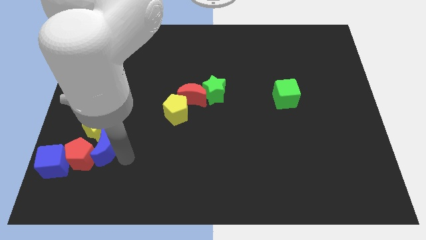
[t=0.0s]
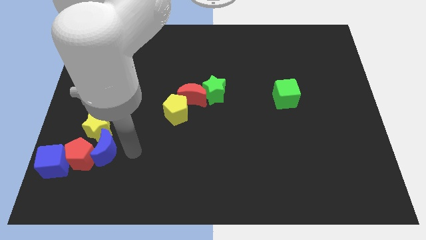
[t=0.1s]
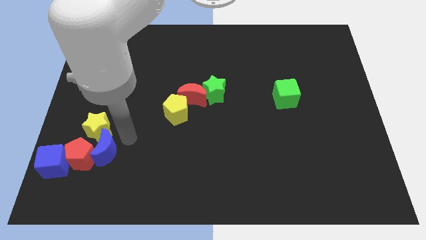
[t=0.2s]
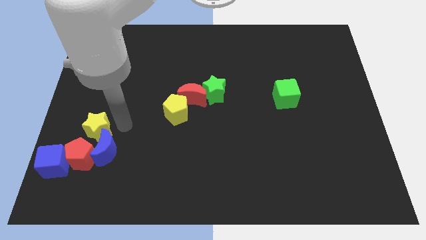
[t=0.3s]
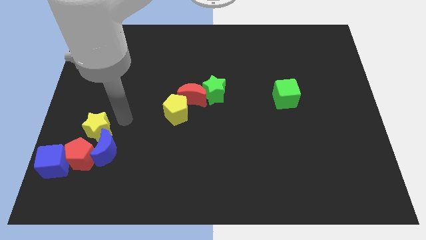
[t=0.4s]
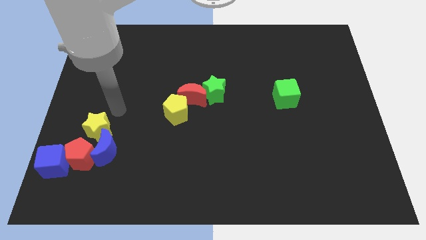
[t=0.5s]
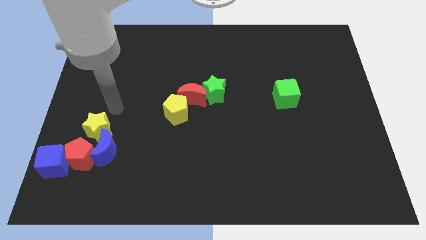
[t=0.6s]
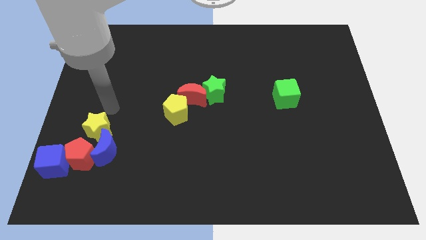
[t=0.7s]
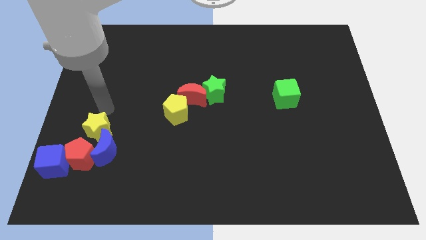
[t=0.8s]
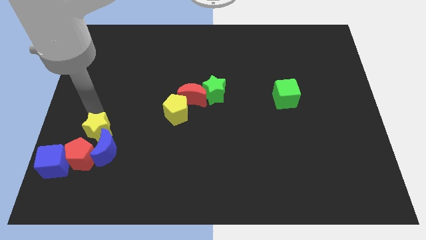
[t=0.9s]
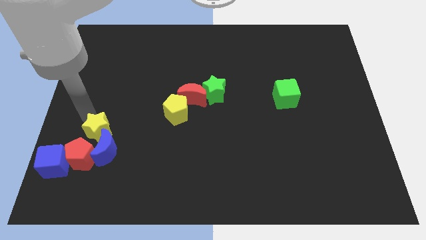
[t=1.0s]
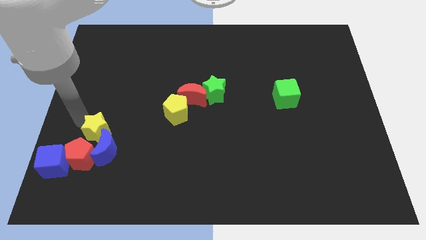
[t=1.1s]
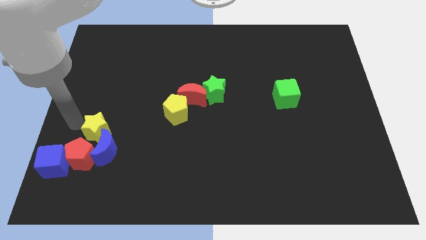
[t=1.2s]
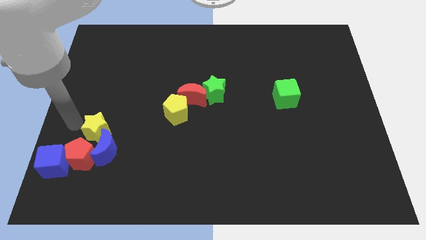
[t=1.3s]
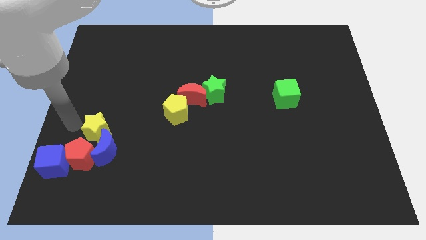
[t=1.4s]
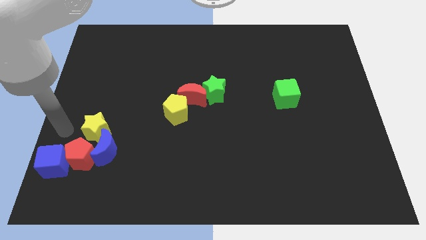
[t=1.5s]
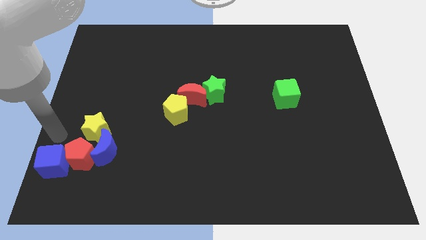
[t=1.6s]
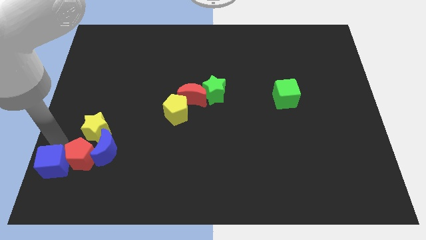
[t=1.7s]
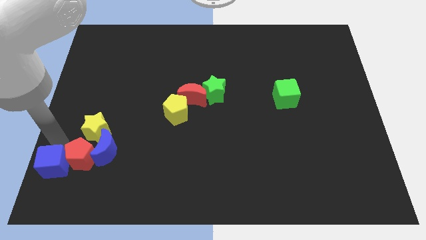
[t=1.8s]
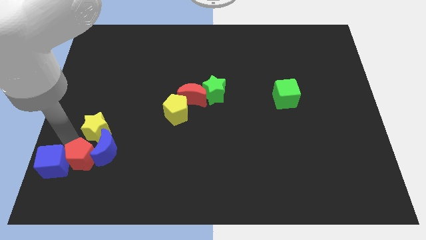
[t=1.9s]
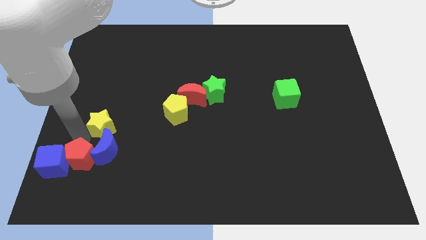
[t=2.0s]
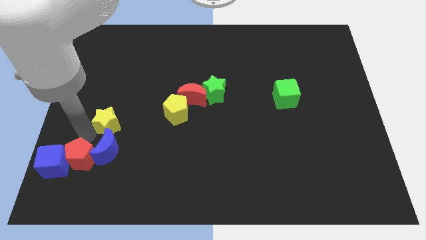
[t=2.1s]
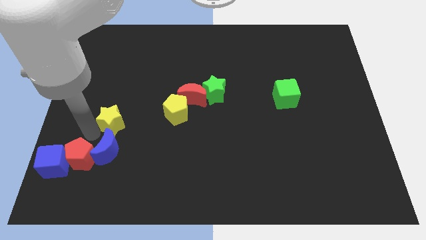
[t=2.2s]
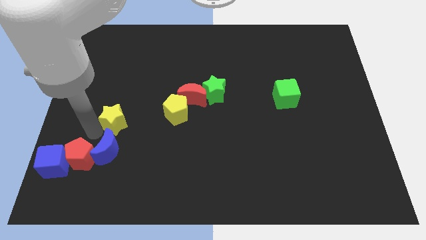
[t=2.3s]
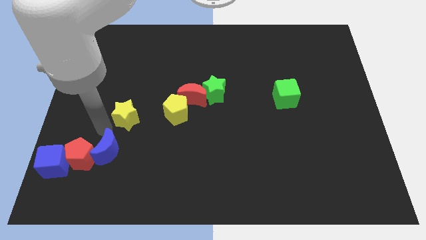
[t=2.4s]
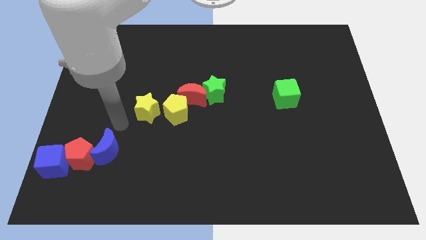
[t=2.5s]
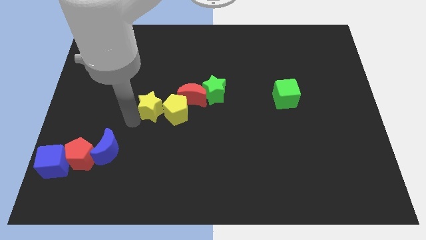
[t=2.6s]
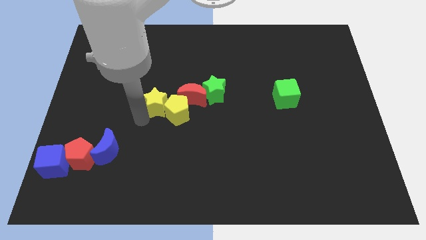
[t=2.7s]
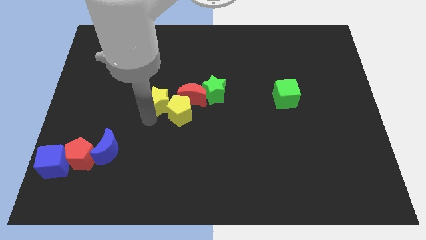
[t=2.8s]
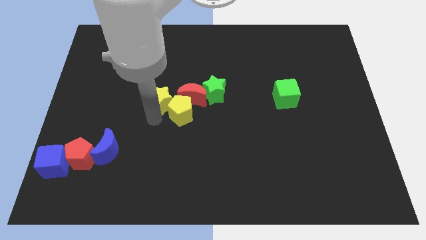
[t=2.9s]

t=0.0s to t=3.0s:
place yellow star near yellow pentagon

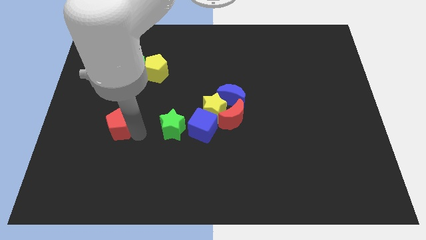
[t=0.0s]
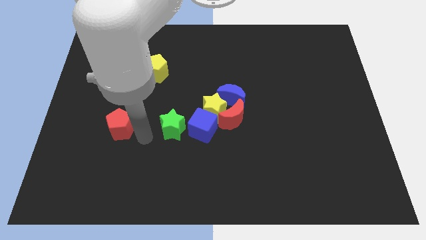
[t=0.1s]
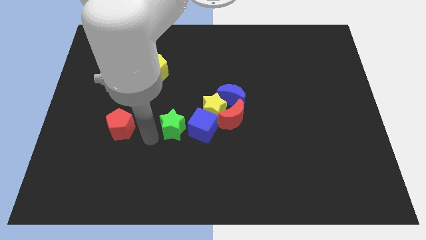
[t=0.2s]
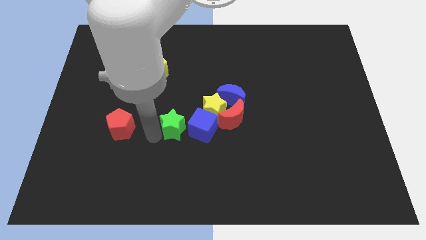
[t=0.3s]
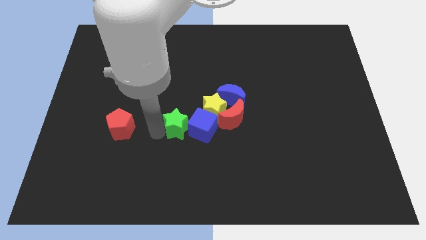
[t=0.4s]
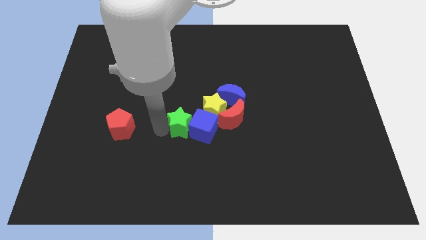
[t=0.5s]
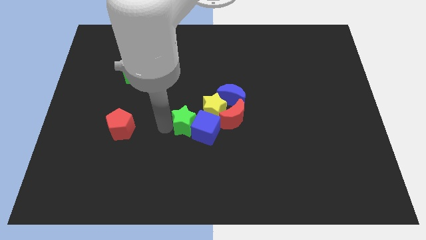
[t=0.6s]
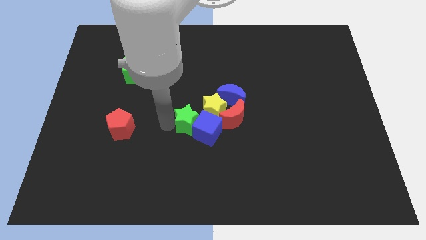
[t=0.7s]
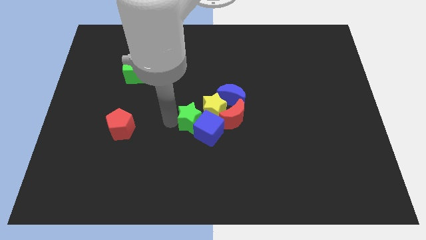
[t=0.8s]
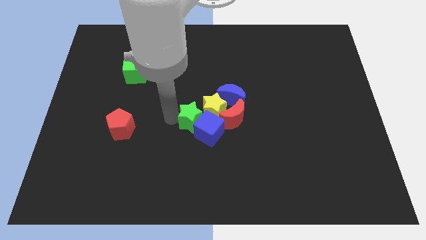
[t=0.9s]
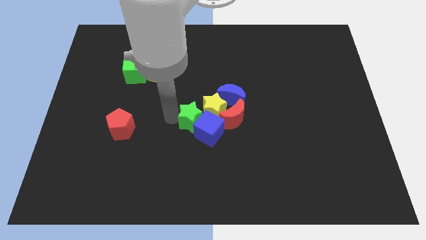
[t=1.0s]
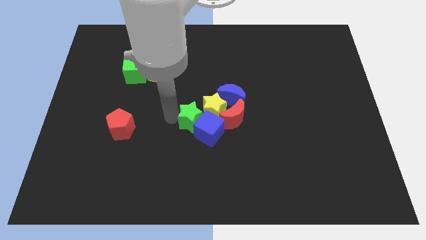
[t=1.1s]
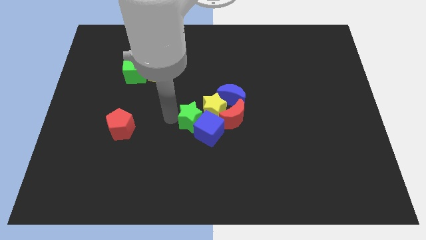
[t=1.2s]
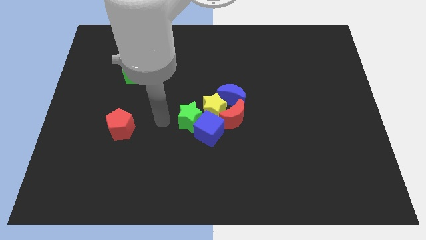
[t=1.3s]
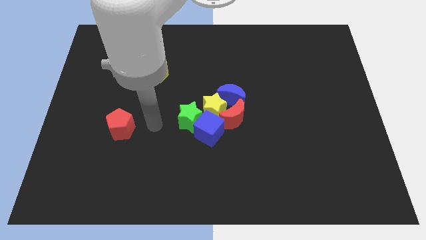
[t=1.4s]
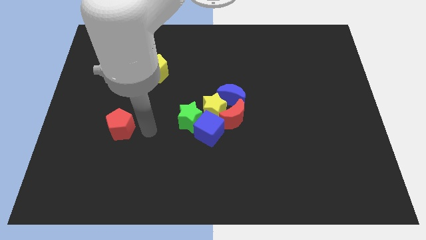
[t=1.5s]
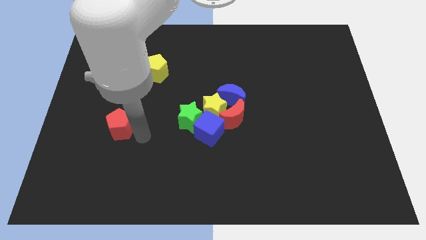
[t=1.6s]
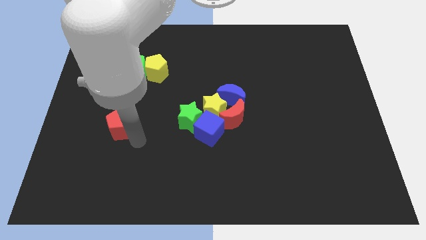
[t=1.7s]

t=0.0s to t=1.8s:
push the green star into the blue cube

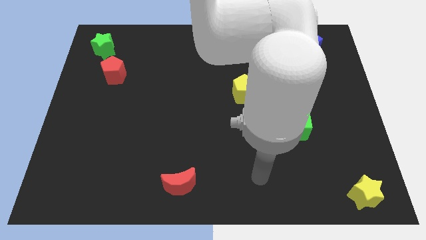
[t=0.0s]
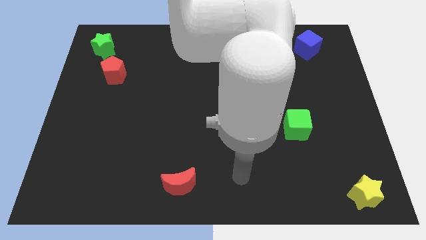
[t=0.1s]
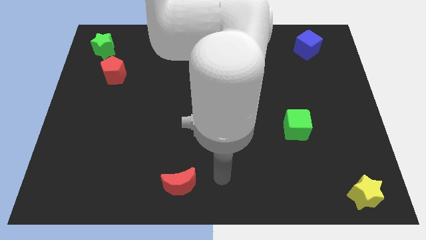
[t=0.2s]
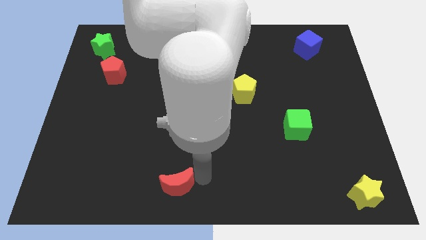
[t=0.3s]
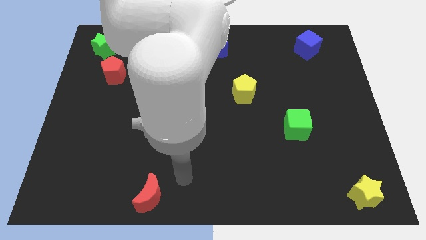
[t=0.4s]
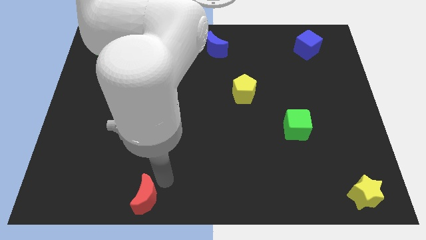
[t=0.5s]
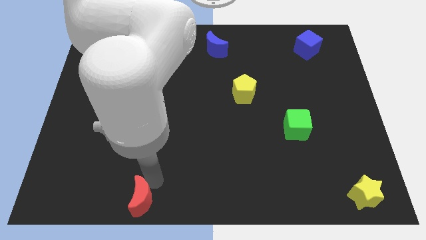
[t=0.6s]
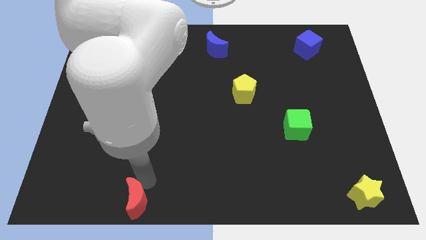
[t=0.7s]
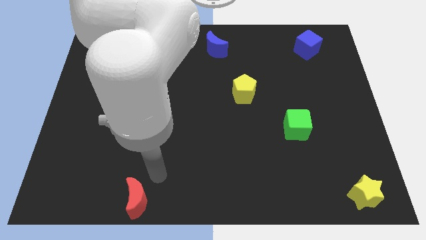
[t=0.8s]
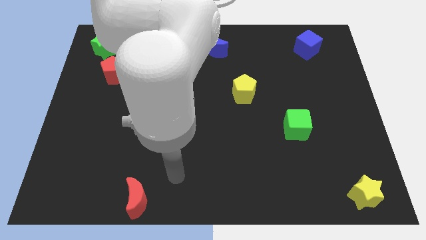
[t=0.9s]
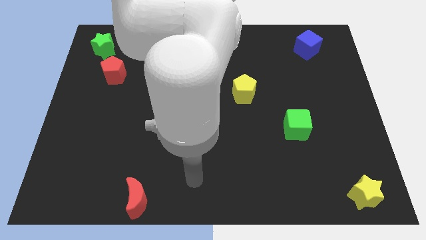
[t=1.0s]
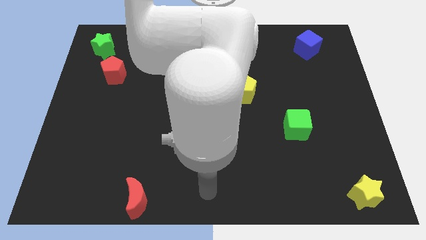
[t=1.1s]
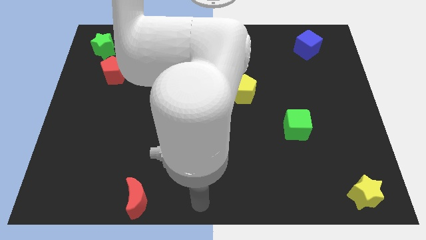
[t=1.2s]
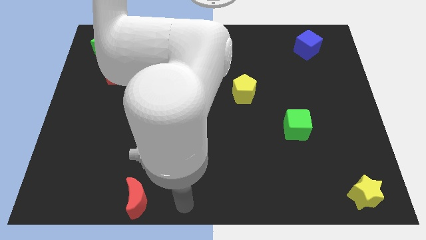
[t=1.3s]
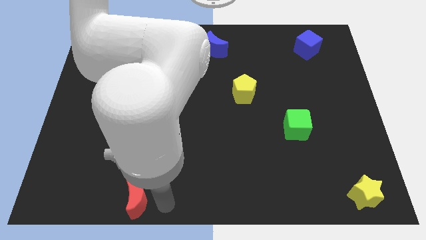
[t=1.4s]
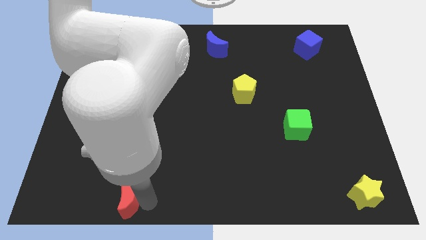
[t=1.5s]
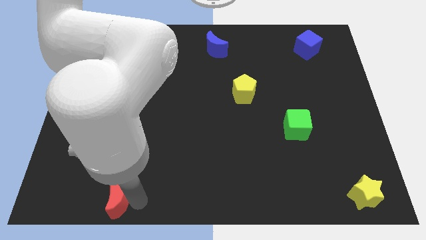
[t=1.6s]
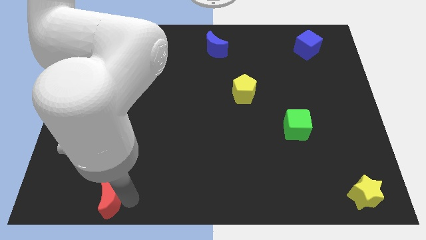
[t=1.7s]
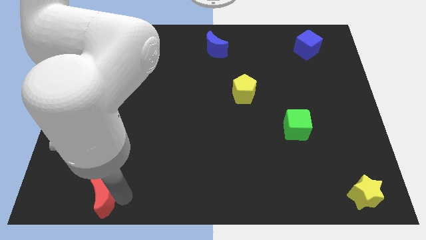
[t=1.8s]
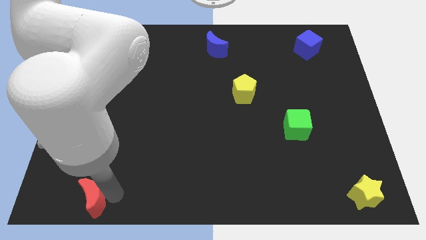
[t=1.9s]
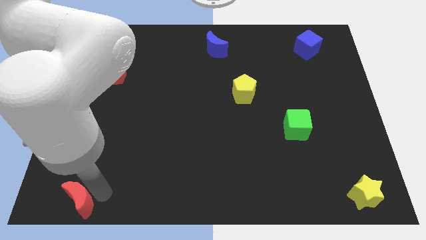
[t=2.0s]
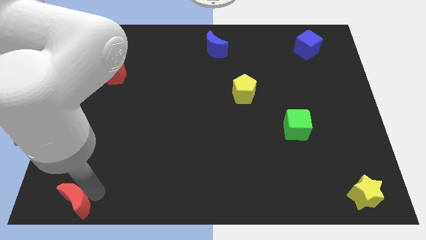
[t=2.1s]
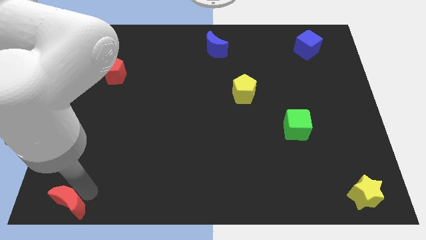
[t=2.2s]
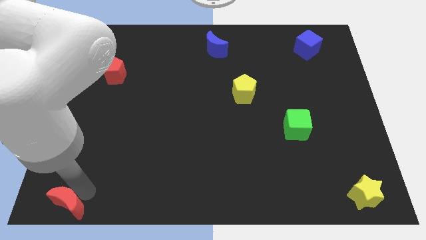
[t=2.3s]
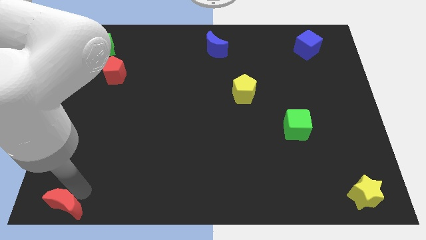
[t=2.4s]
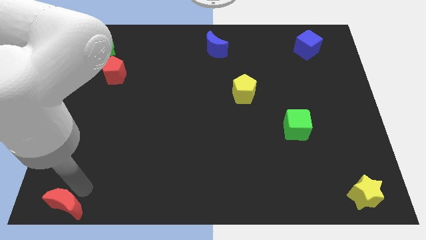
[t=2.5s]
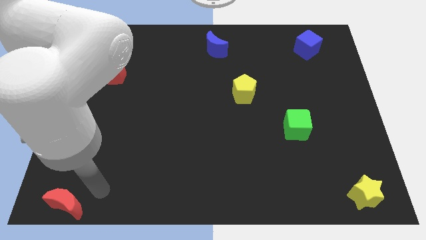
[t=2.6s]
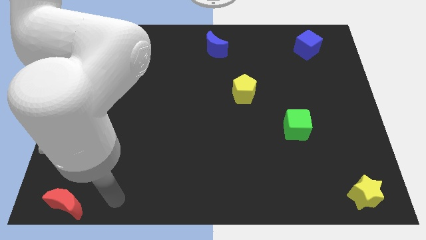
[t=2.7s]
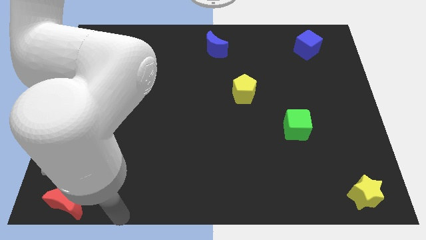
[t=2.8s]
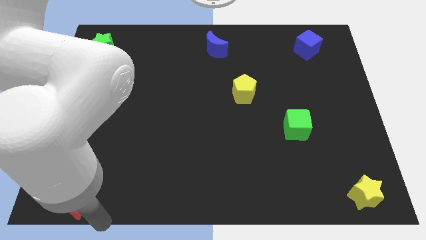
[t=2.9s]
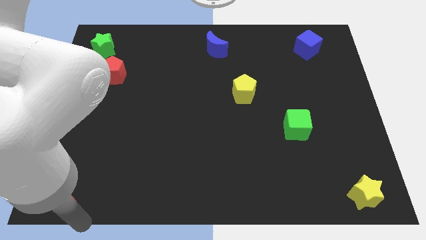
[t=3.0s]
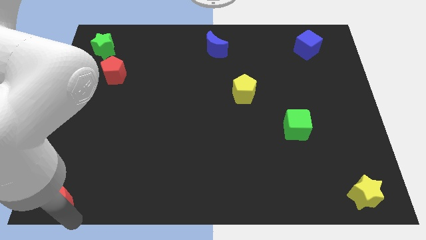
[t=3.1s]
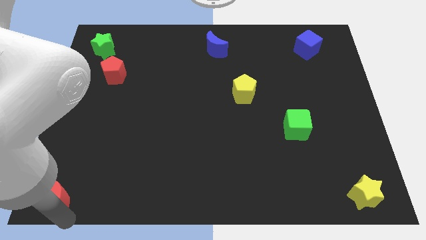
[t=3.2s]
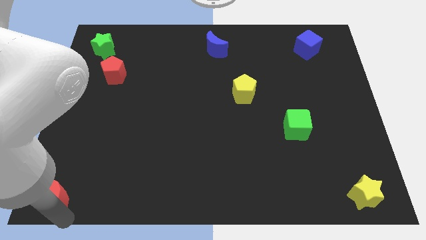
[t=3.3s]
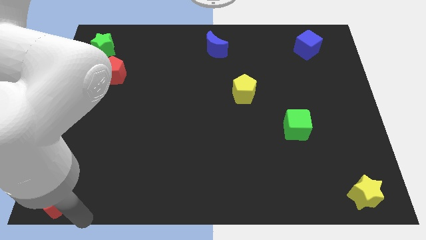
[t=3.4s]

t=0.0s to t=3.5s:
push the red moon to the bottom left

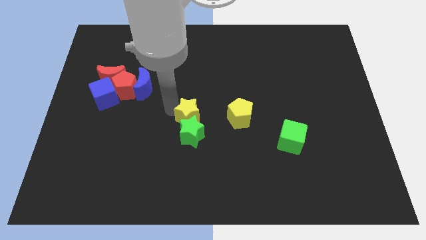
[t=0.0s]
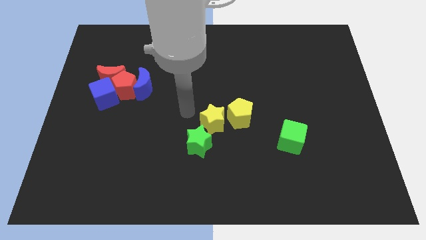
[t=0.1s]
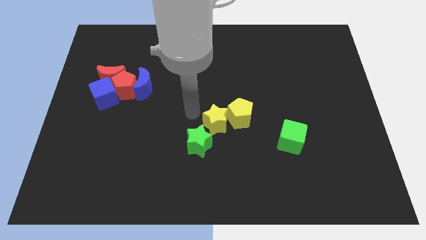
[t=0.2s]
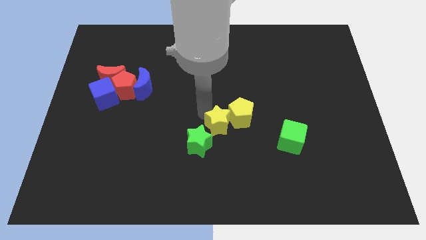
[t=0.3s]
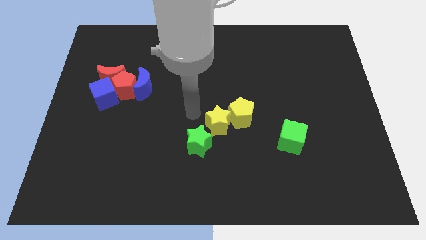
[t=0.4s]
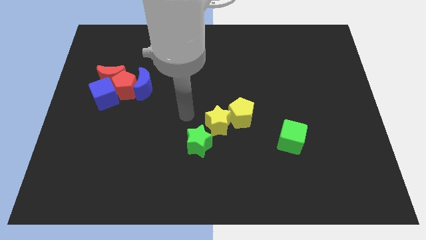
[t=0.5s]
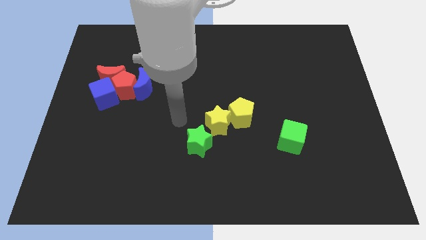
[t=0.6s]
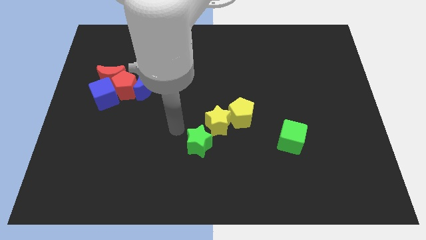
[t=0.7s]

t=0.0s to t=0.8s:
place the yellow star in between the green star and the yellow pentagon
